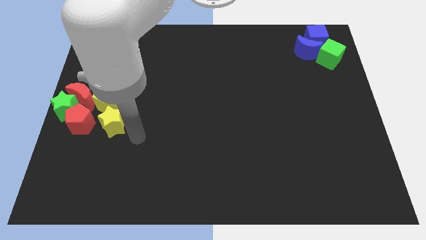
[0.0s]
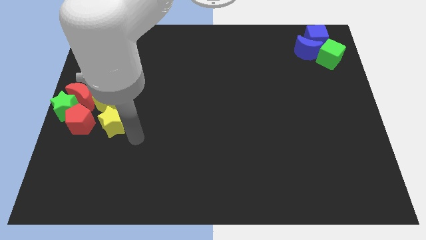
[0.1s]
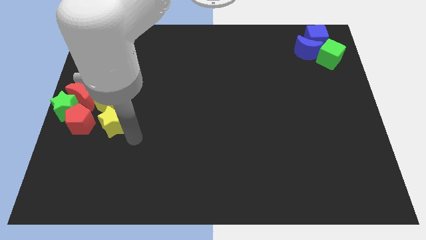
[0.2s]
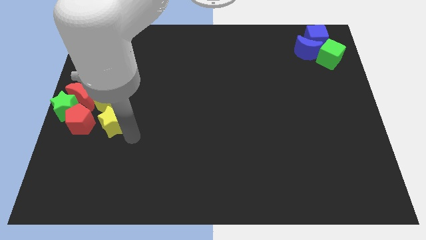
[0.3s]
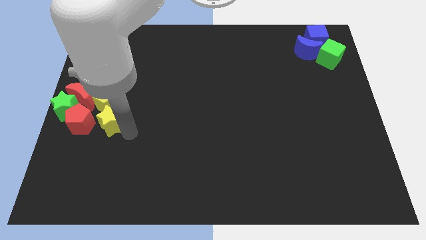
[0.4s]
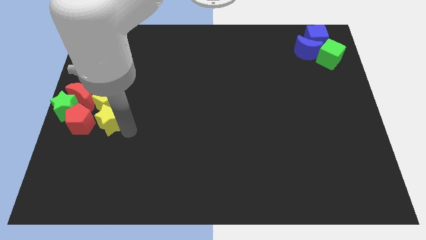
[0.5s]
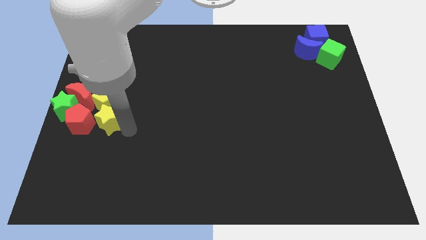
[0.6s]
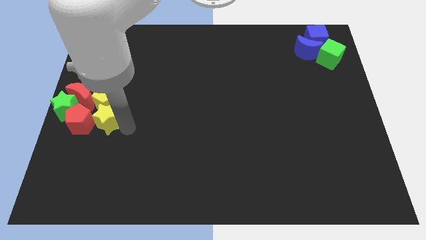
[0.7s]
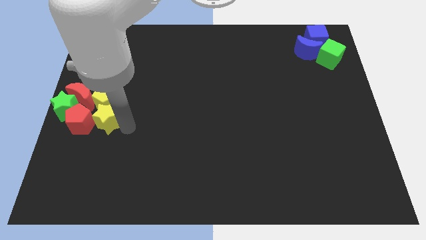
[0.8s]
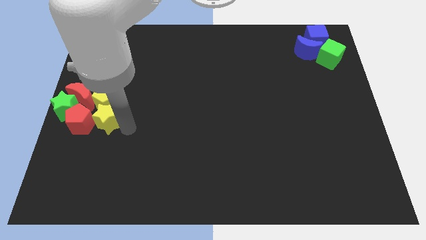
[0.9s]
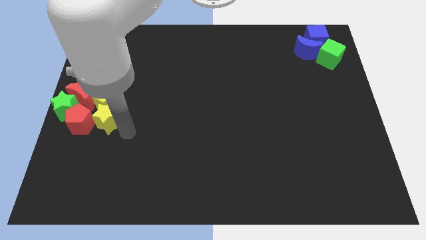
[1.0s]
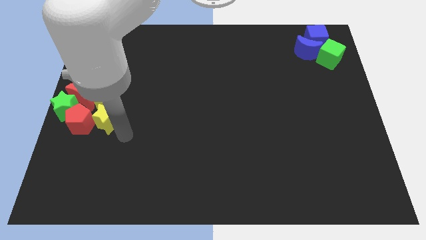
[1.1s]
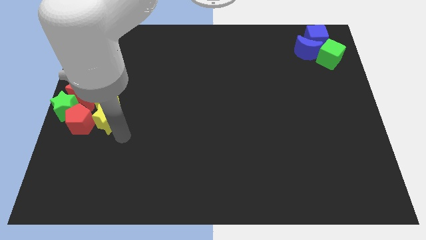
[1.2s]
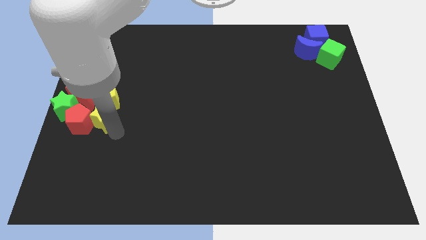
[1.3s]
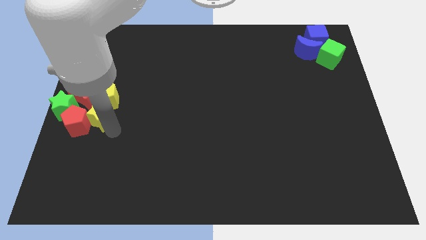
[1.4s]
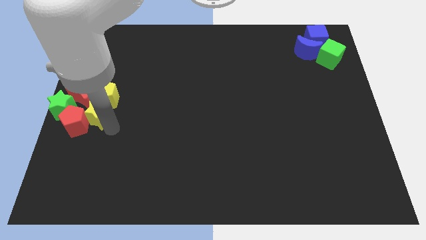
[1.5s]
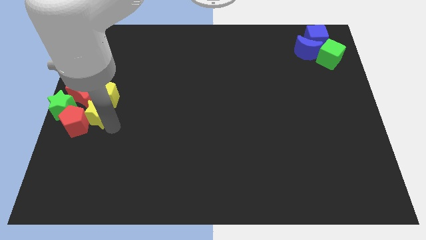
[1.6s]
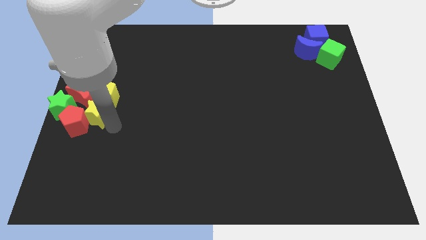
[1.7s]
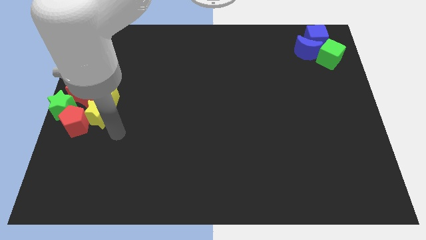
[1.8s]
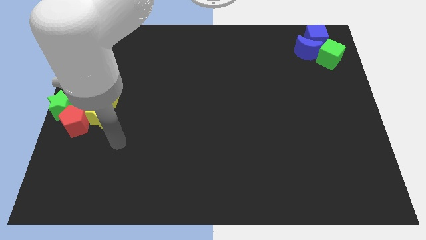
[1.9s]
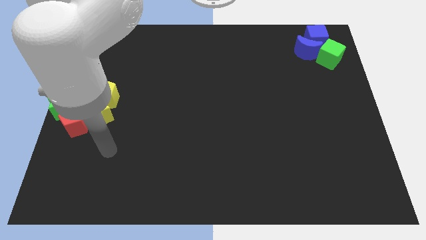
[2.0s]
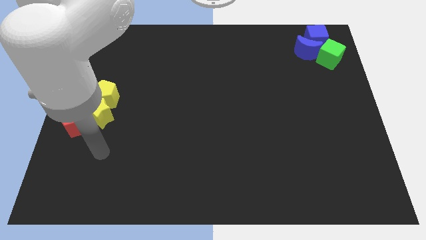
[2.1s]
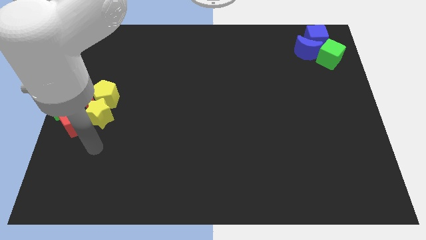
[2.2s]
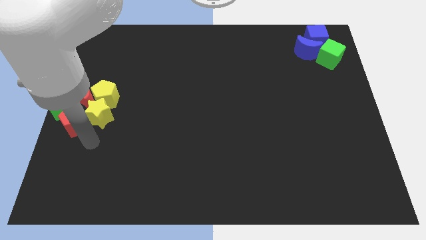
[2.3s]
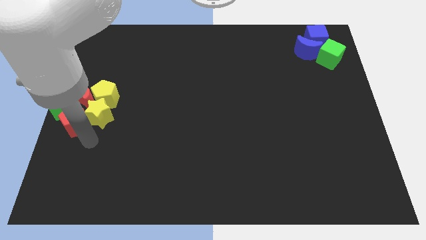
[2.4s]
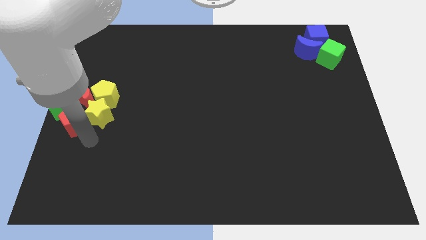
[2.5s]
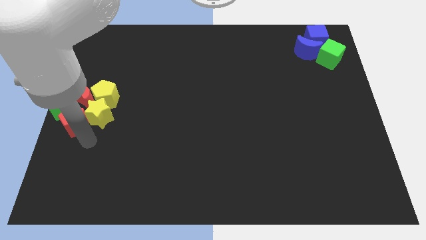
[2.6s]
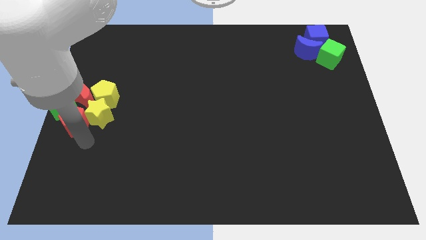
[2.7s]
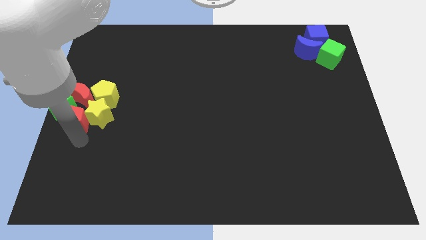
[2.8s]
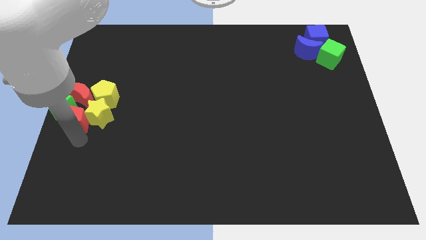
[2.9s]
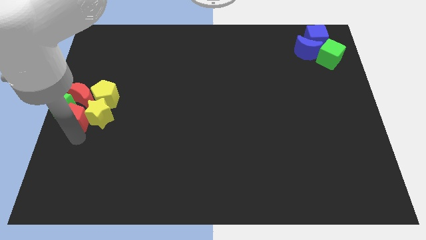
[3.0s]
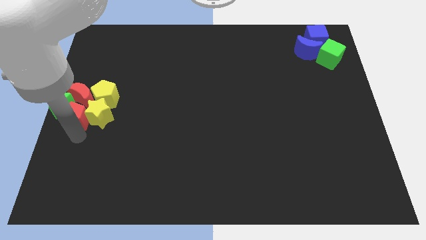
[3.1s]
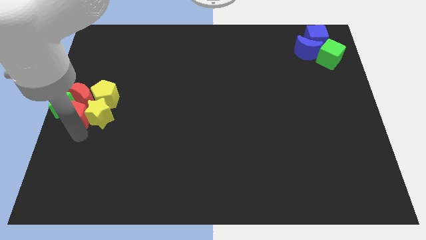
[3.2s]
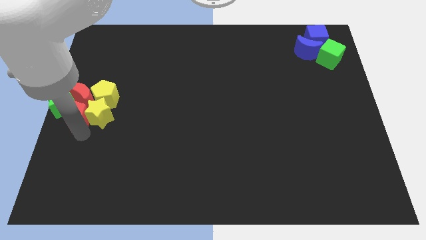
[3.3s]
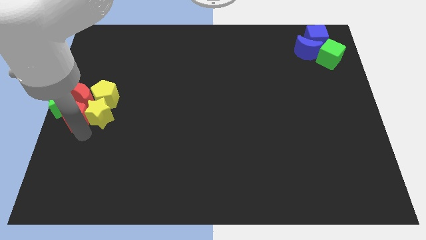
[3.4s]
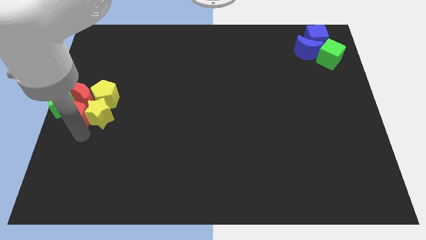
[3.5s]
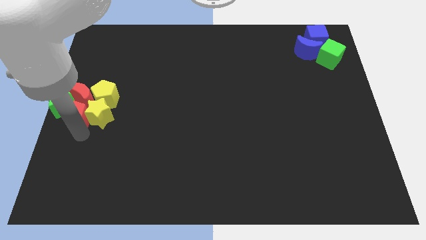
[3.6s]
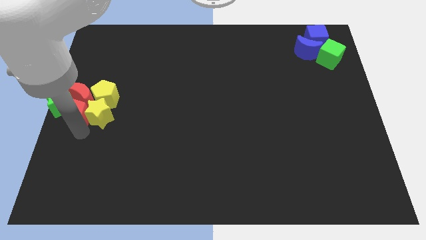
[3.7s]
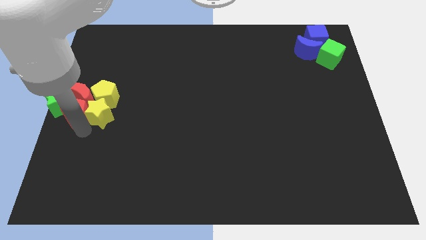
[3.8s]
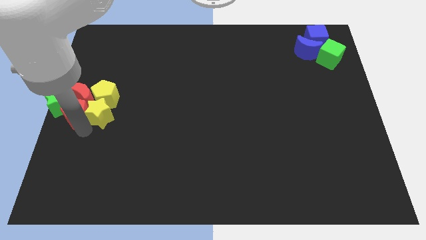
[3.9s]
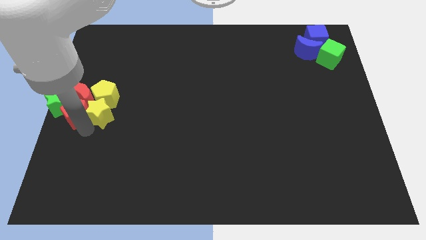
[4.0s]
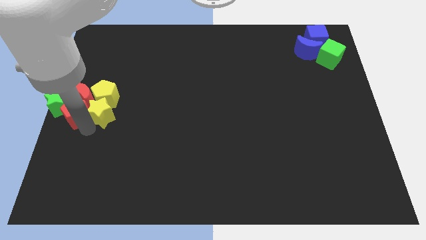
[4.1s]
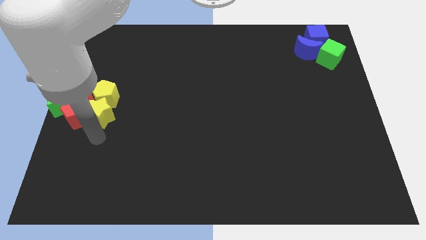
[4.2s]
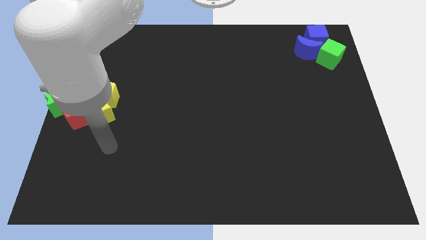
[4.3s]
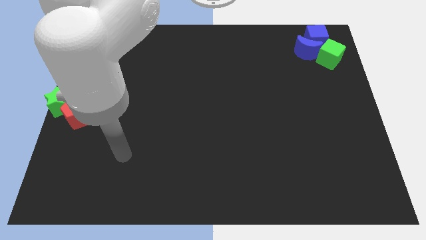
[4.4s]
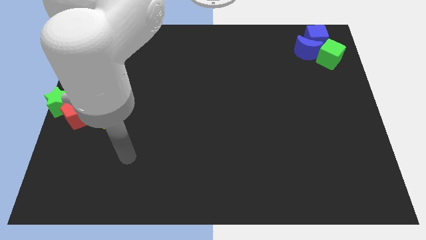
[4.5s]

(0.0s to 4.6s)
adjust the group of blocks at the left center of the board

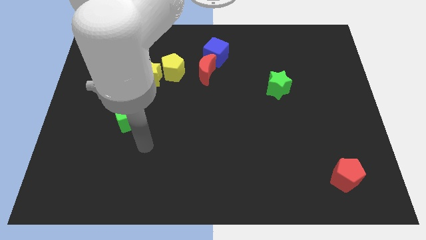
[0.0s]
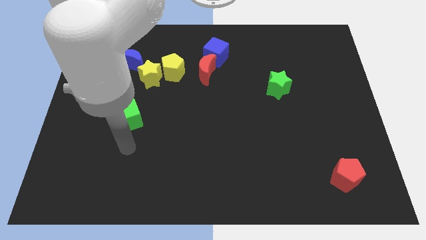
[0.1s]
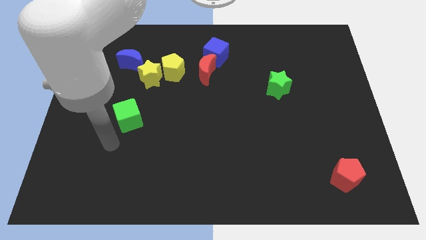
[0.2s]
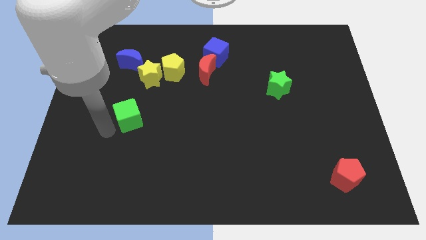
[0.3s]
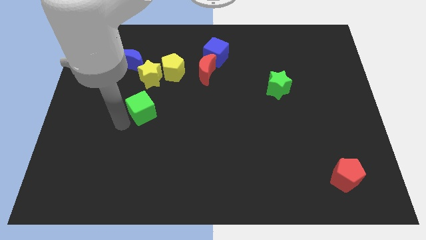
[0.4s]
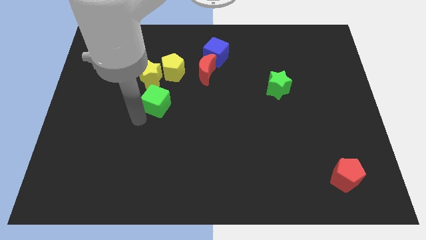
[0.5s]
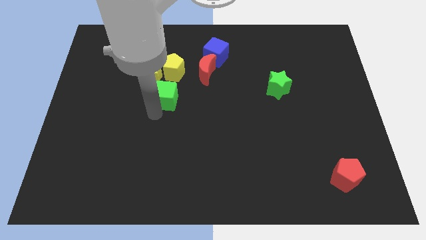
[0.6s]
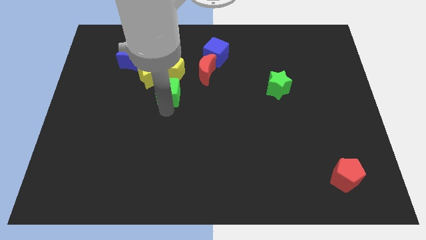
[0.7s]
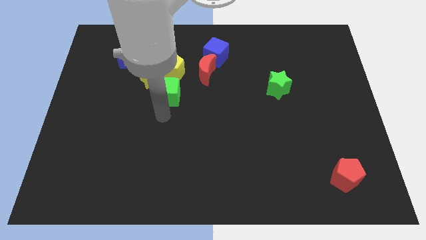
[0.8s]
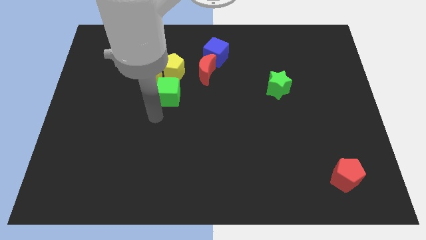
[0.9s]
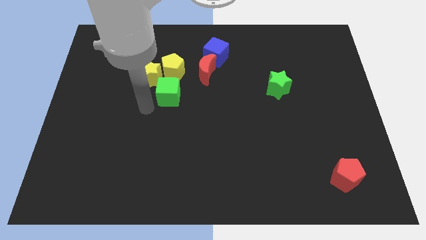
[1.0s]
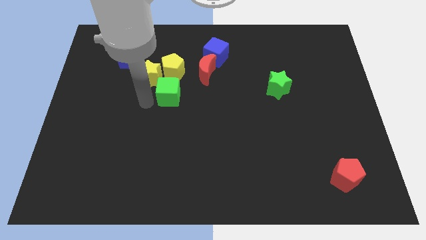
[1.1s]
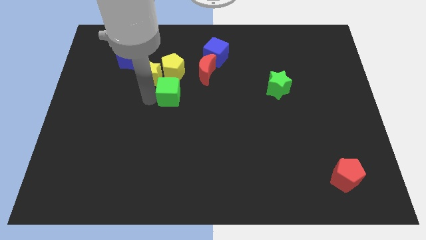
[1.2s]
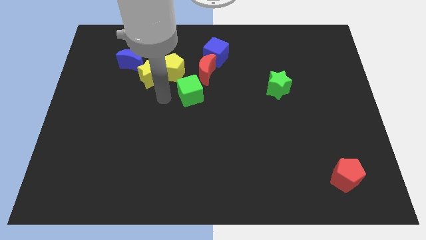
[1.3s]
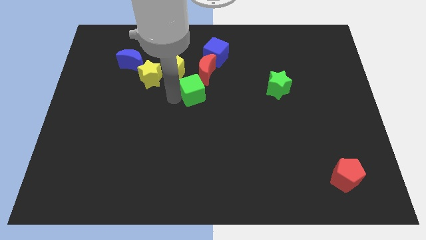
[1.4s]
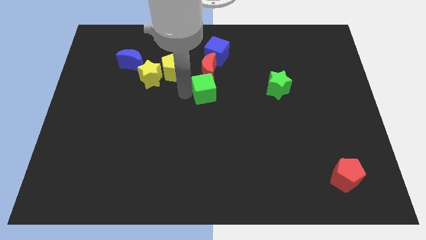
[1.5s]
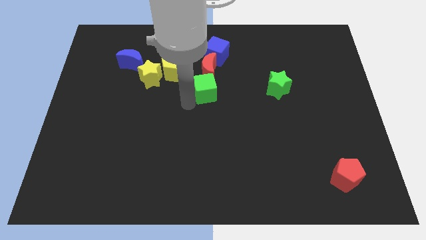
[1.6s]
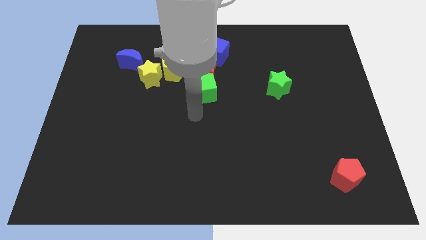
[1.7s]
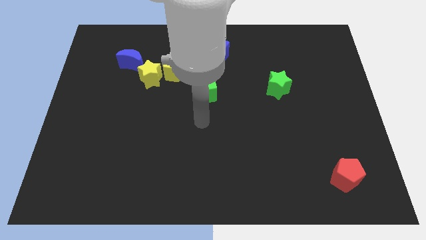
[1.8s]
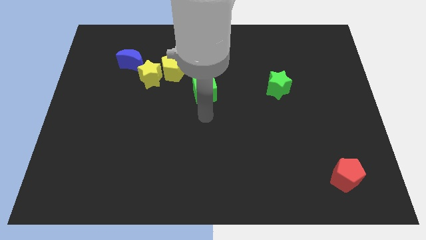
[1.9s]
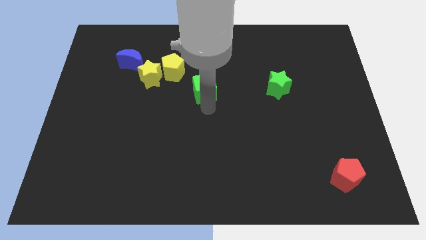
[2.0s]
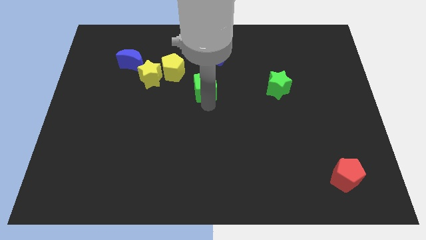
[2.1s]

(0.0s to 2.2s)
place the green cube into the bottom of the red crescent

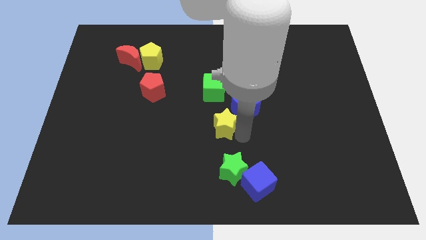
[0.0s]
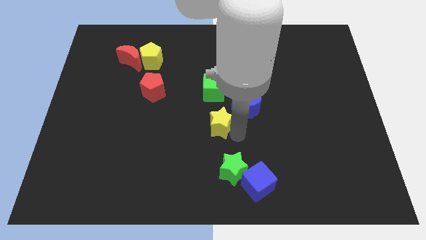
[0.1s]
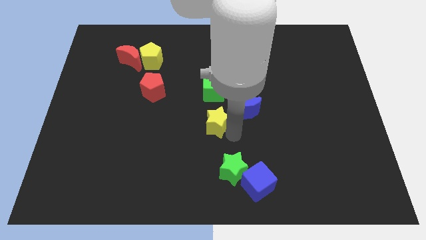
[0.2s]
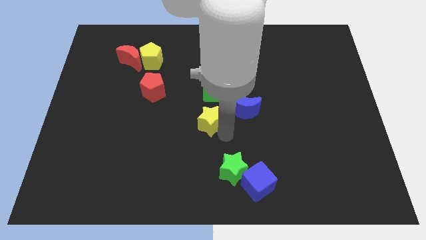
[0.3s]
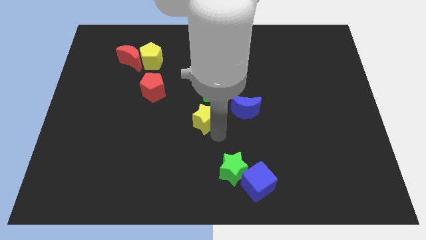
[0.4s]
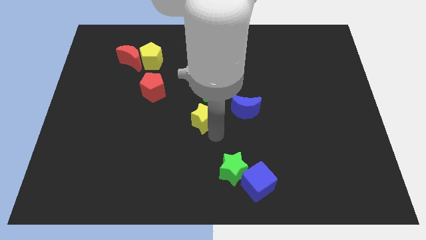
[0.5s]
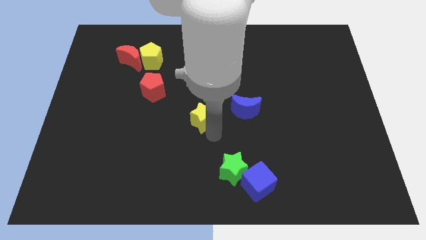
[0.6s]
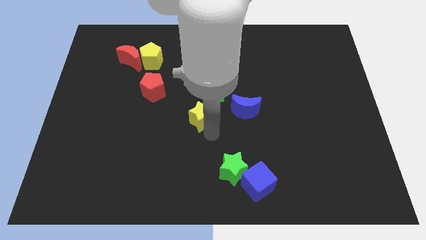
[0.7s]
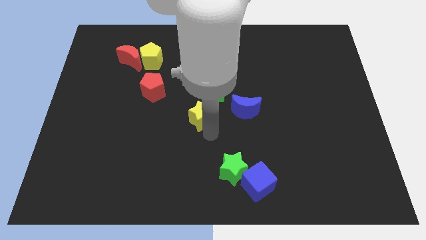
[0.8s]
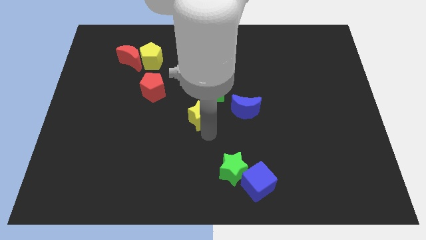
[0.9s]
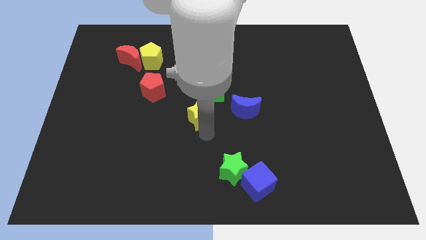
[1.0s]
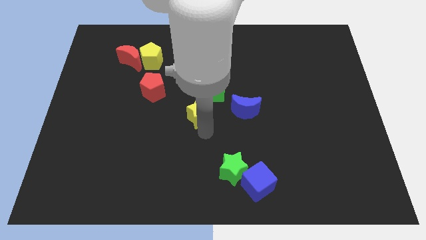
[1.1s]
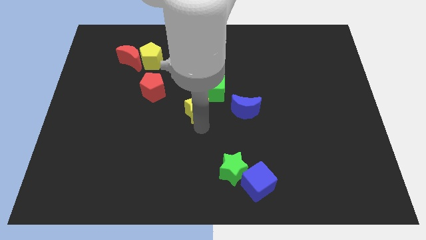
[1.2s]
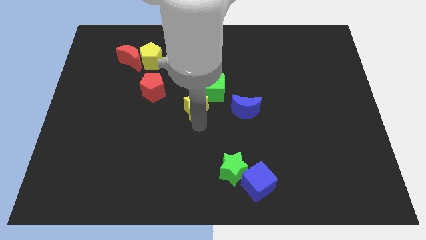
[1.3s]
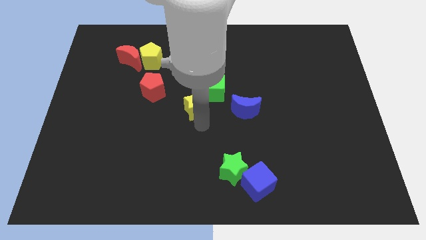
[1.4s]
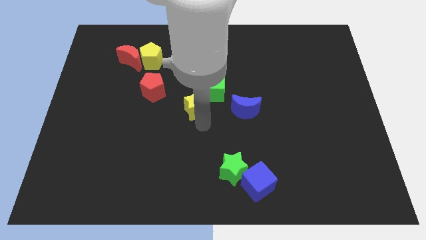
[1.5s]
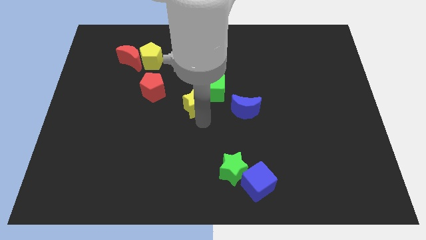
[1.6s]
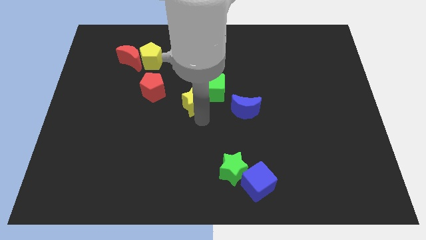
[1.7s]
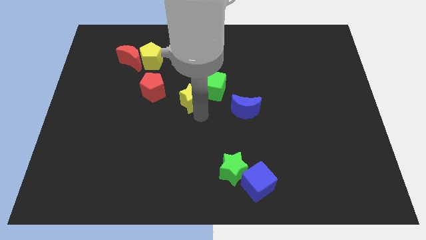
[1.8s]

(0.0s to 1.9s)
push the yellow star into green cube

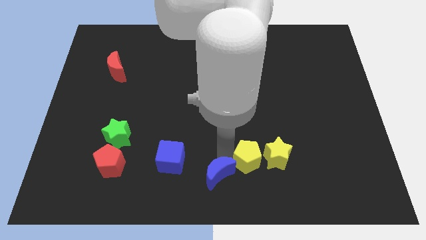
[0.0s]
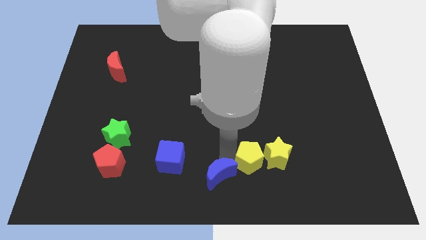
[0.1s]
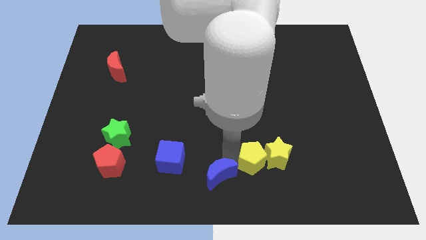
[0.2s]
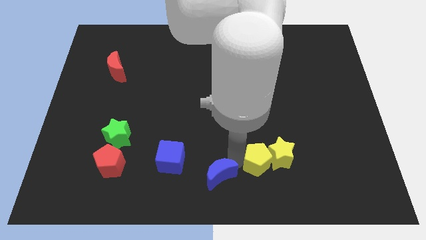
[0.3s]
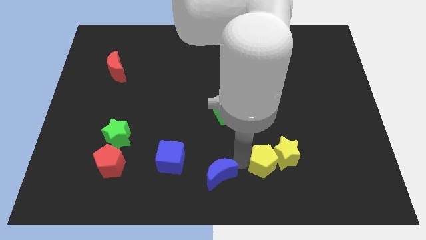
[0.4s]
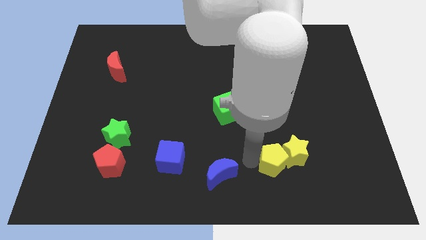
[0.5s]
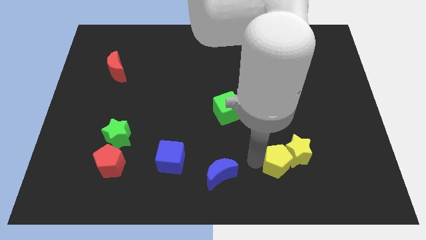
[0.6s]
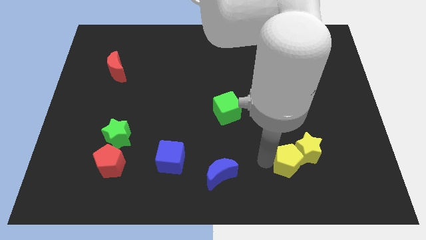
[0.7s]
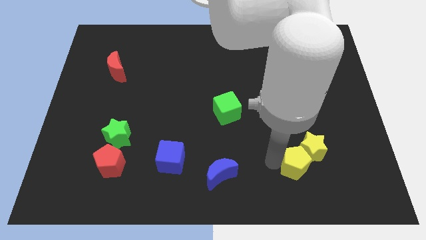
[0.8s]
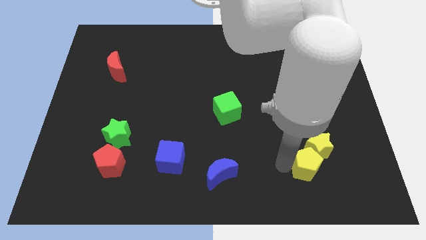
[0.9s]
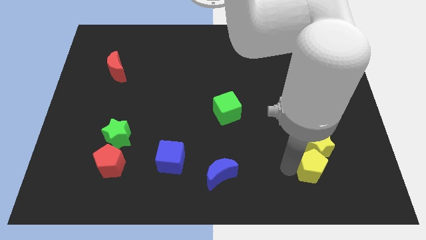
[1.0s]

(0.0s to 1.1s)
separate the yellow blocks from blue moon
